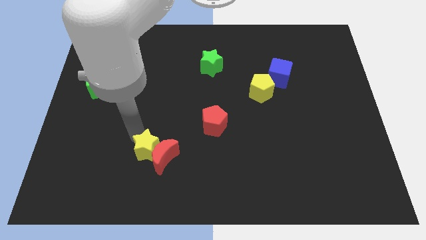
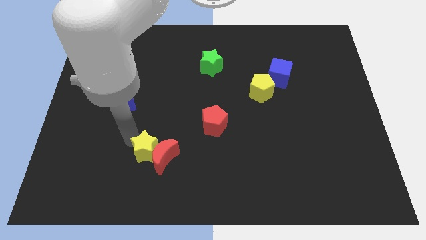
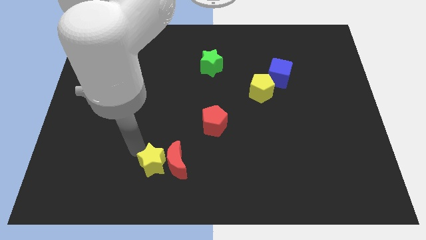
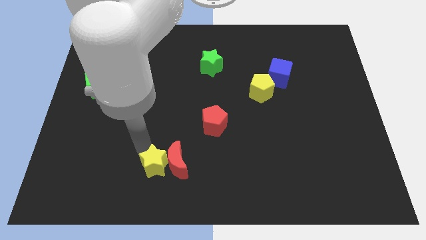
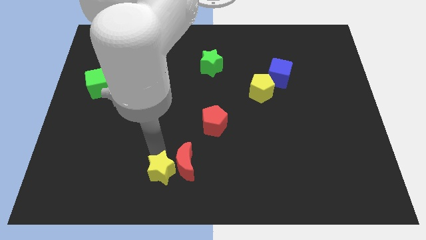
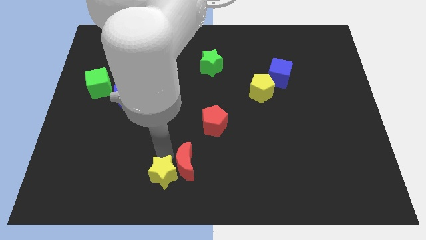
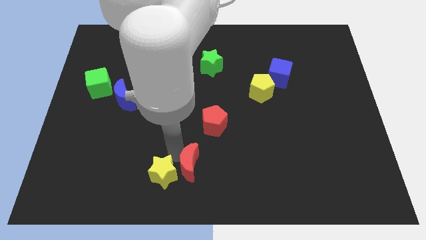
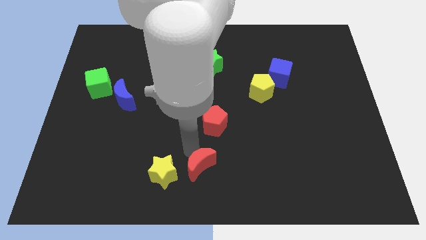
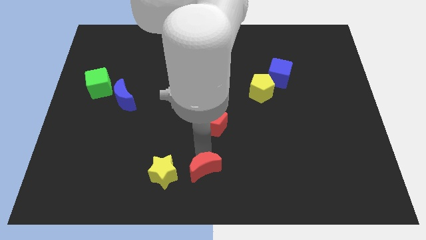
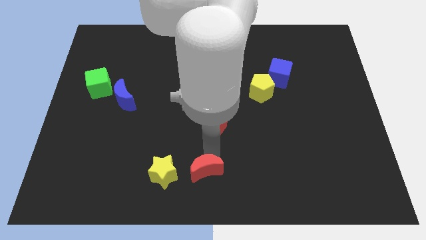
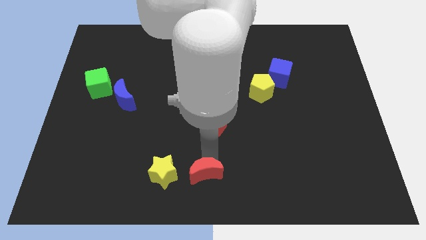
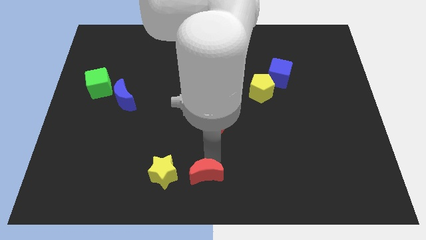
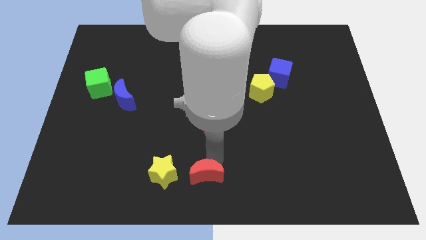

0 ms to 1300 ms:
separate the red crescent from yellow star

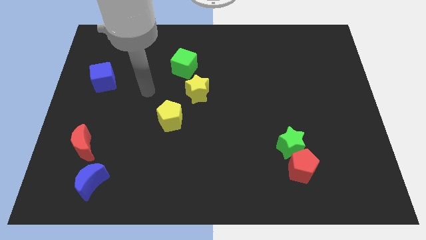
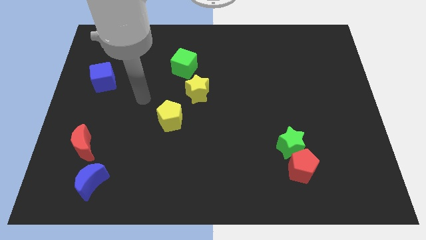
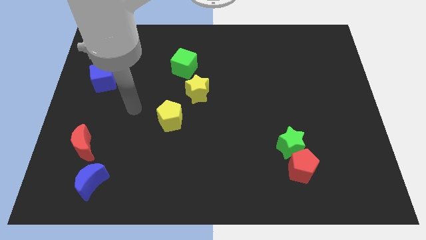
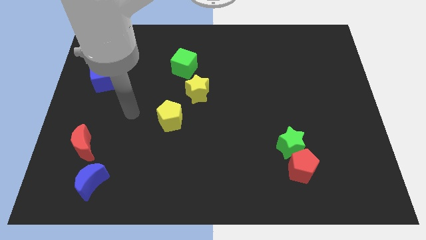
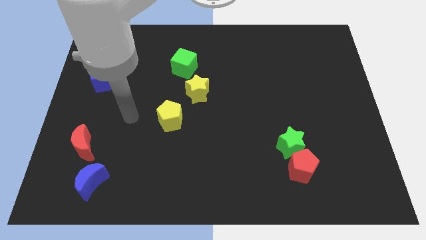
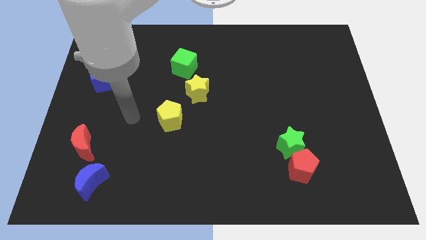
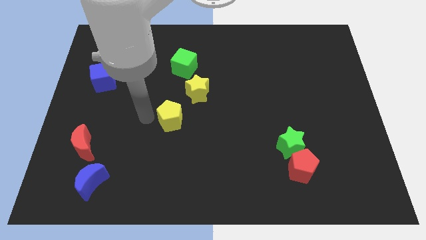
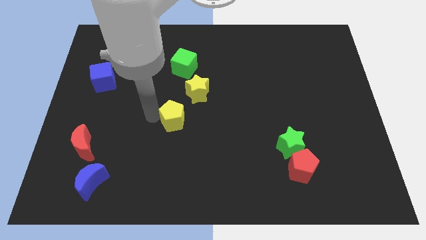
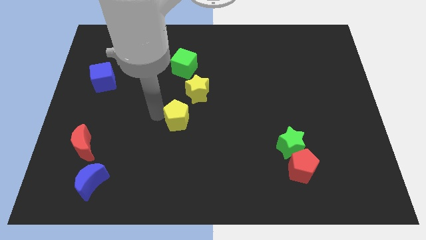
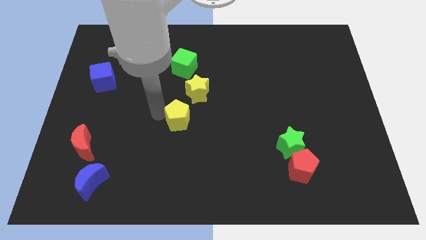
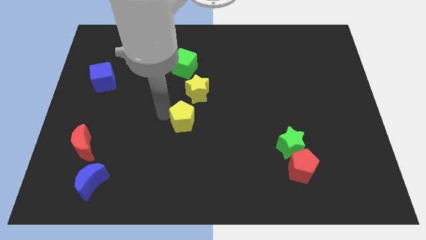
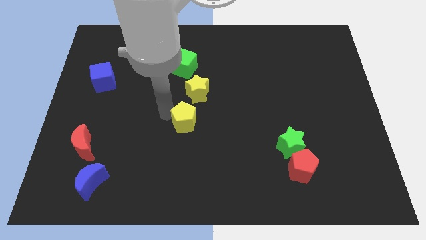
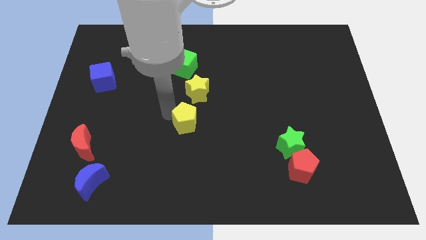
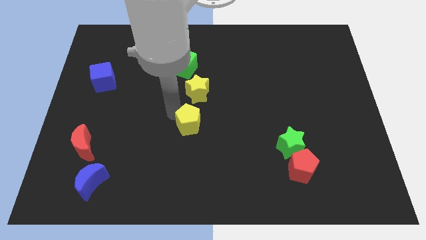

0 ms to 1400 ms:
move the yellow pentagon towards the center of the board

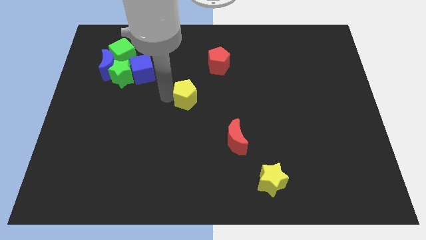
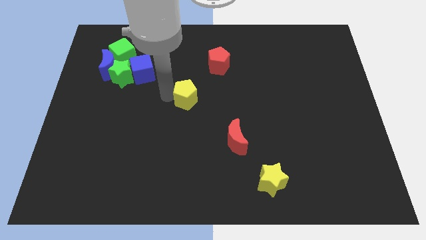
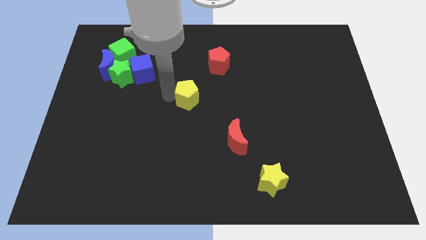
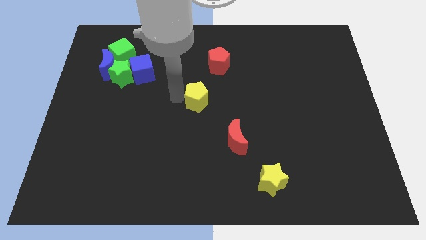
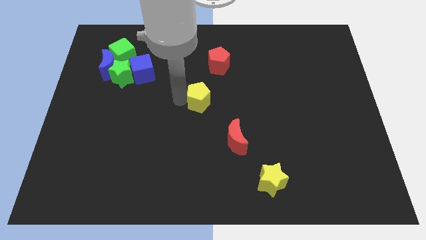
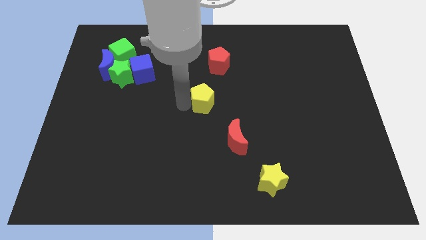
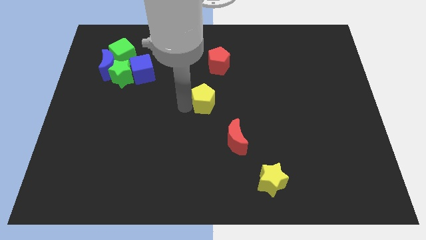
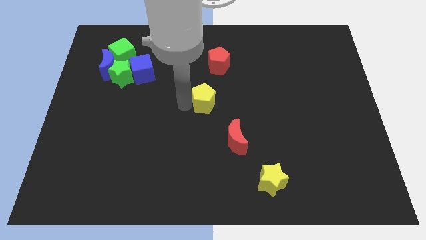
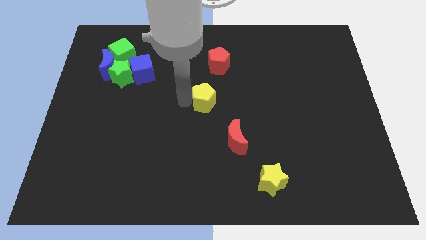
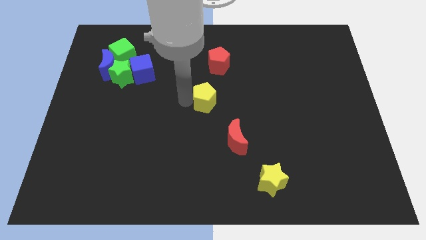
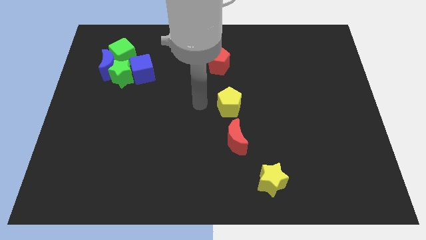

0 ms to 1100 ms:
place yellow pentagon above red crescent

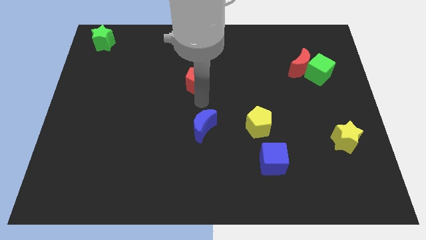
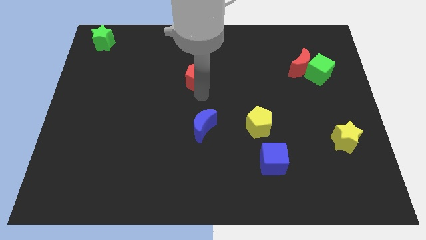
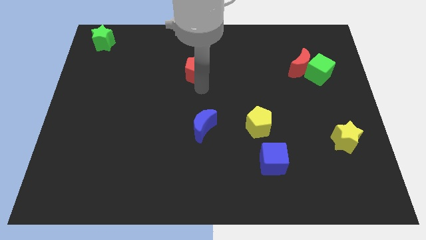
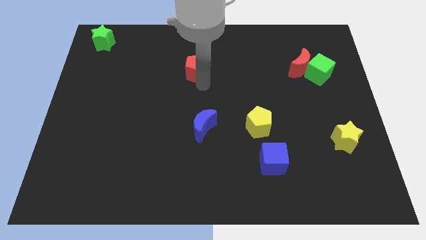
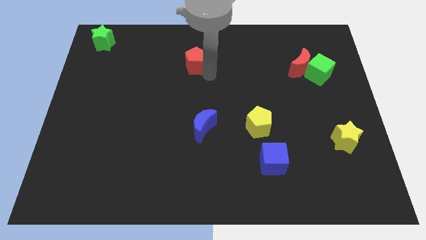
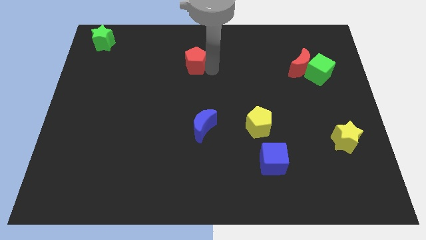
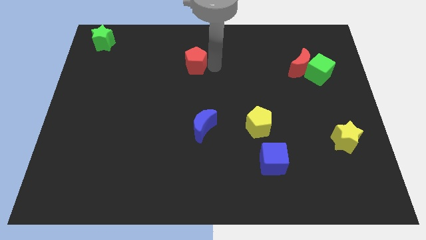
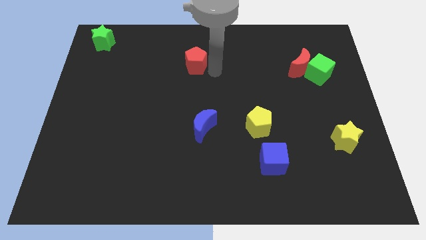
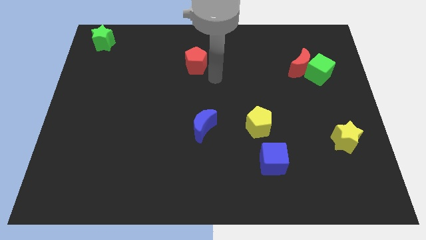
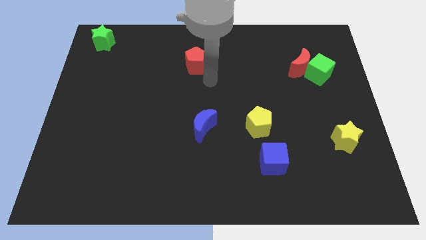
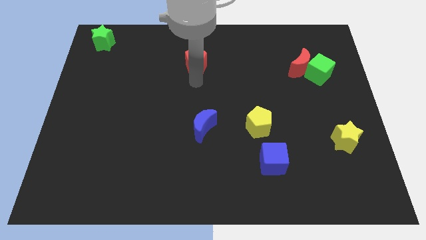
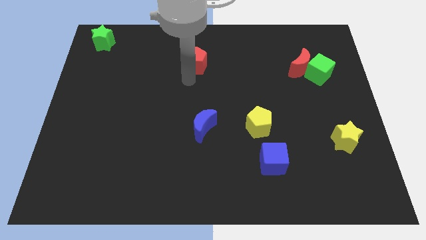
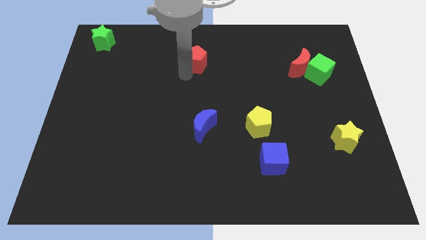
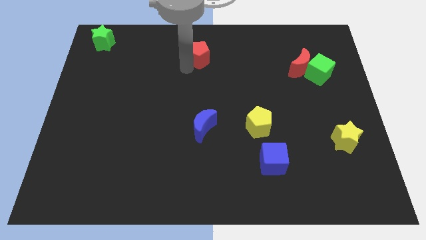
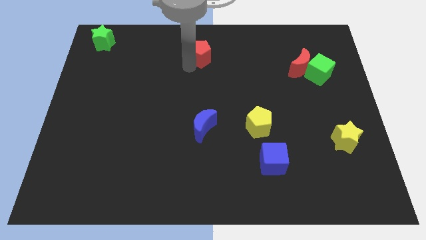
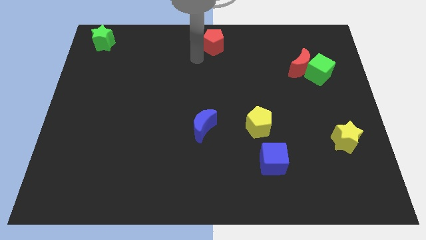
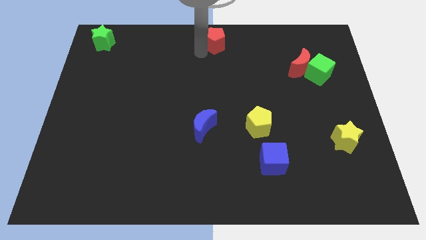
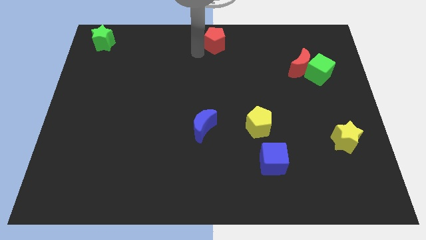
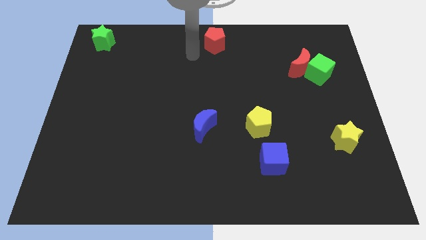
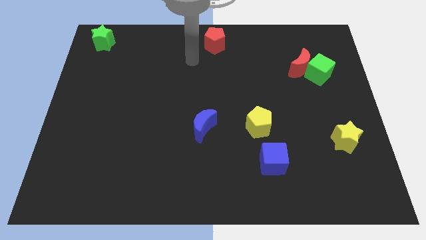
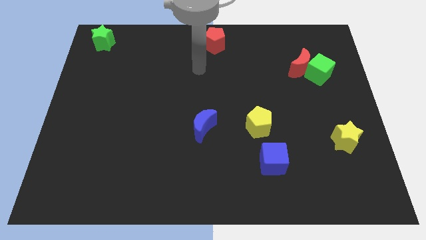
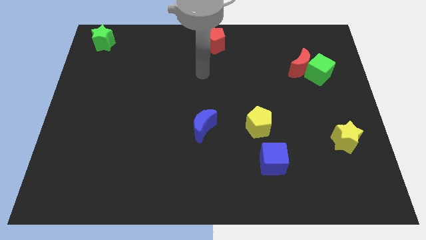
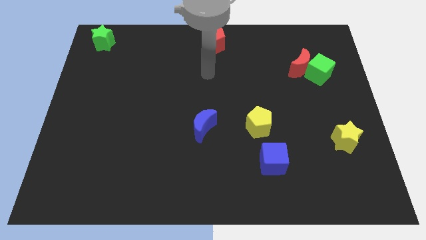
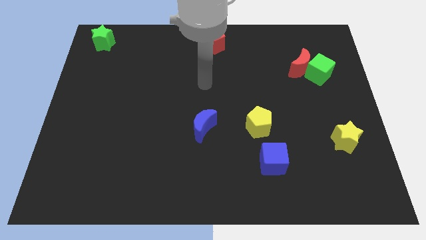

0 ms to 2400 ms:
move the red pentagon to the top center of the board

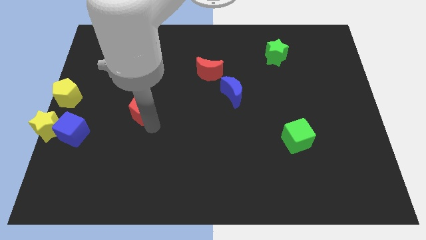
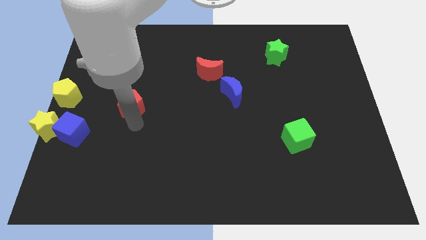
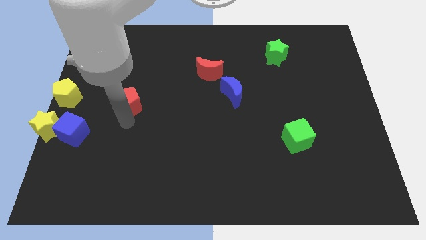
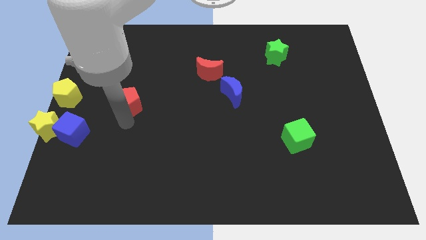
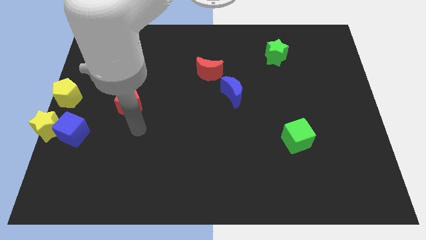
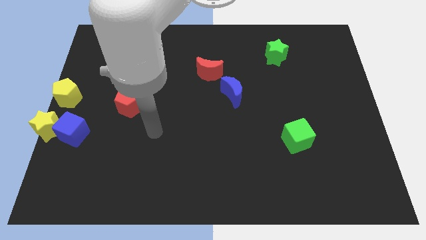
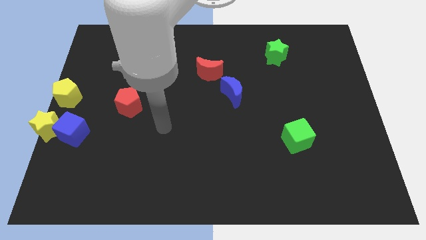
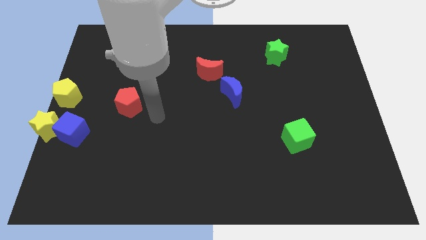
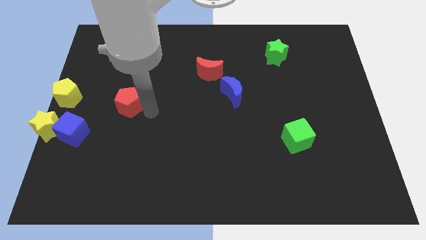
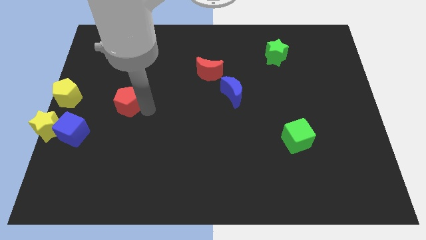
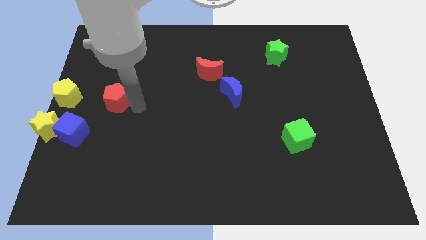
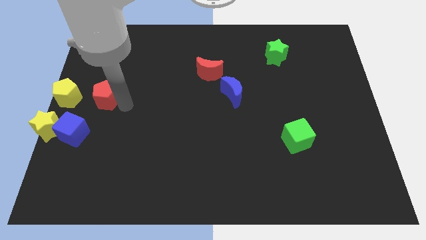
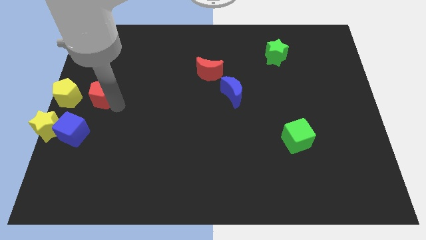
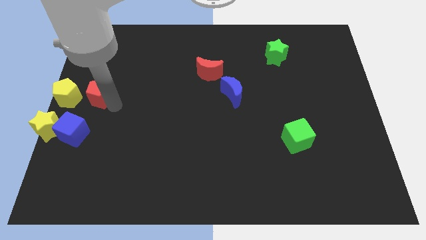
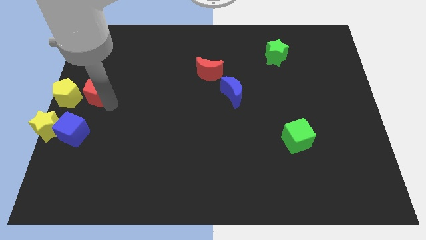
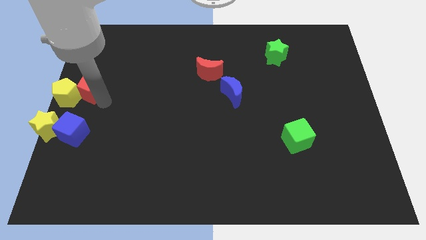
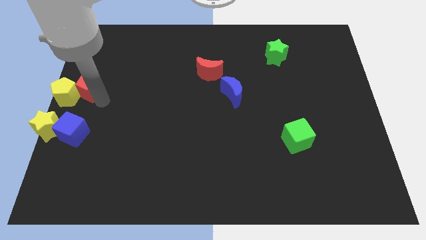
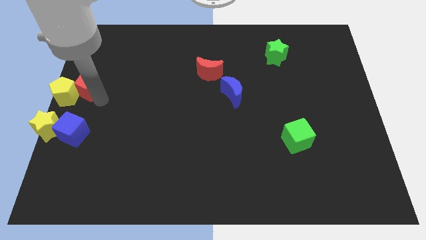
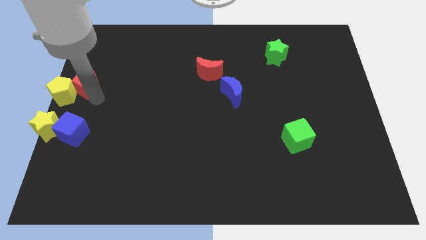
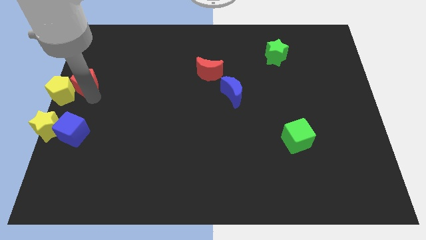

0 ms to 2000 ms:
push the red pentagon into the yellow pentagon

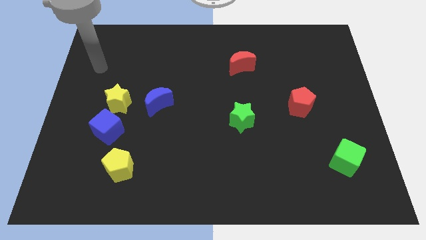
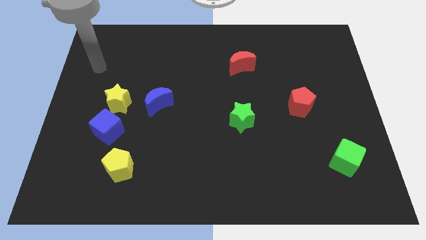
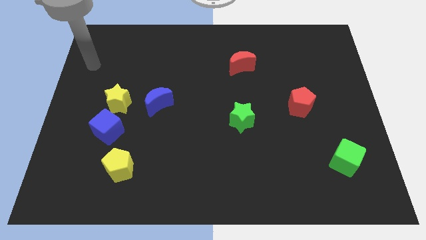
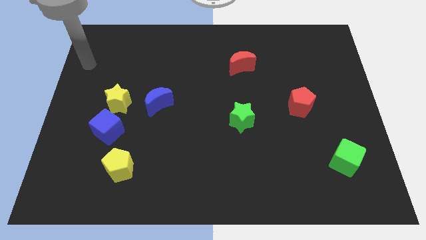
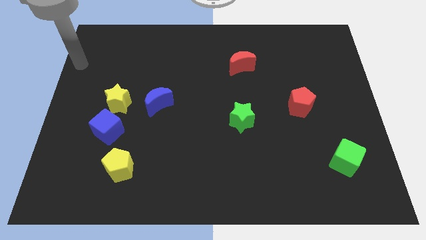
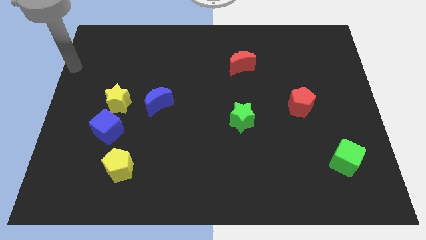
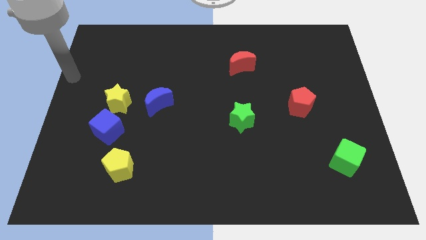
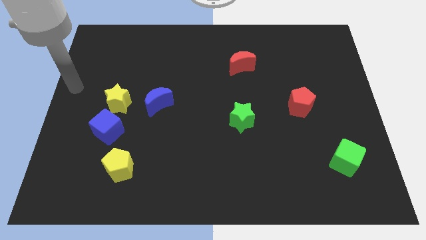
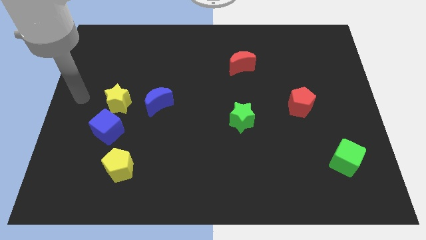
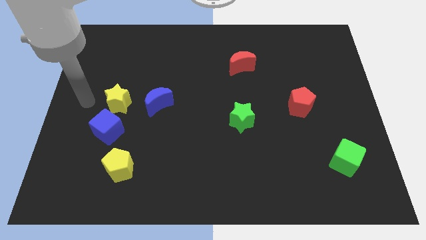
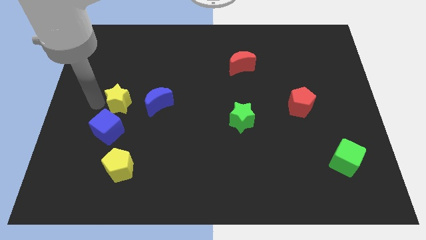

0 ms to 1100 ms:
move your arm to the left of yellow star
